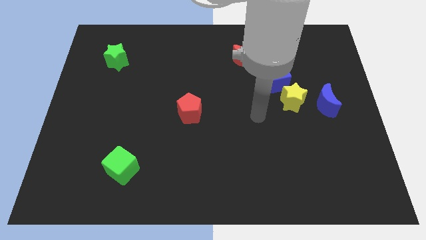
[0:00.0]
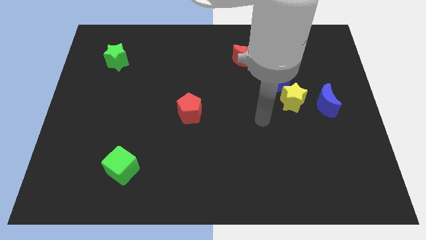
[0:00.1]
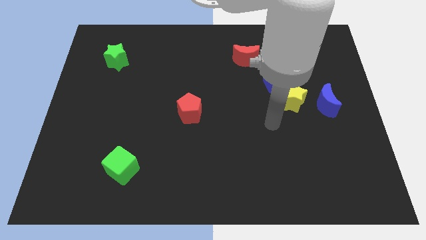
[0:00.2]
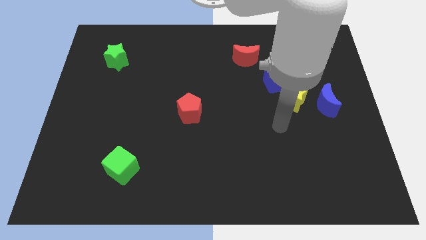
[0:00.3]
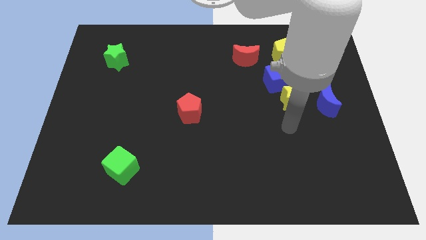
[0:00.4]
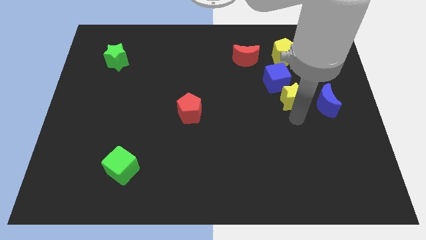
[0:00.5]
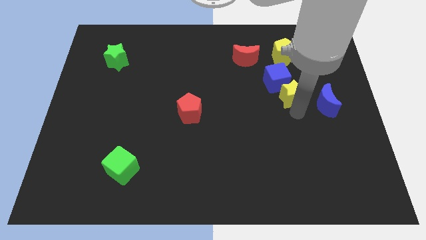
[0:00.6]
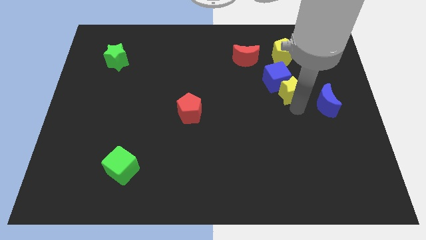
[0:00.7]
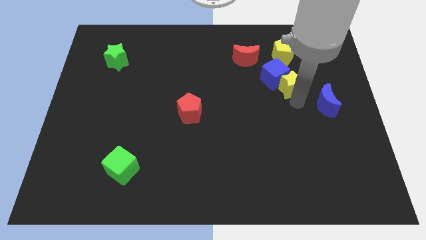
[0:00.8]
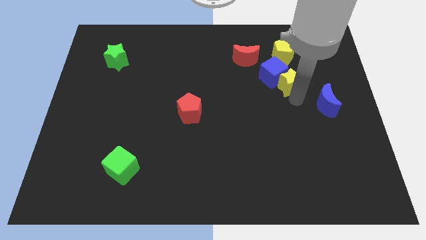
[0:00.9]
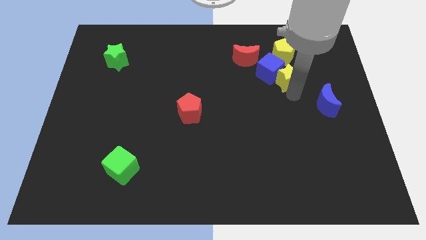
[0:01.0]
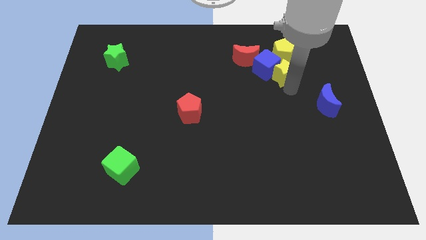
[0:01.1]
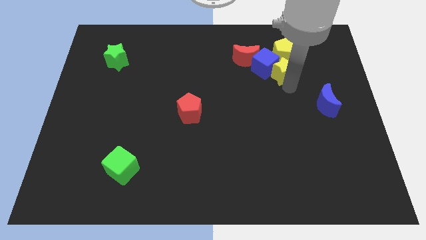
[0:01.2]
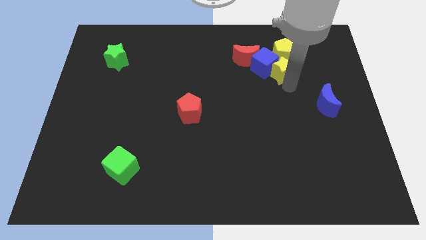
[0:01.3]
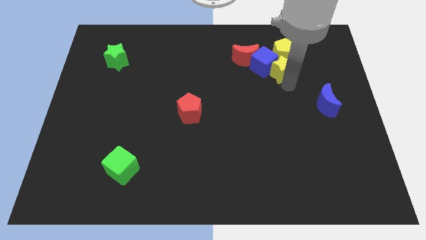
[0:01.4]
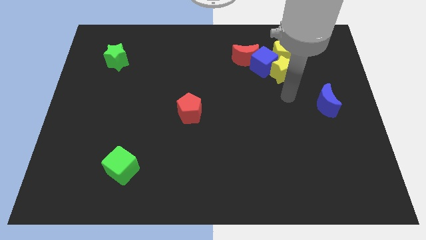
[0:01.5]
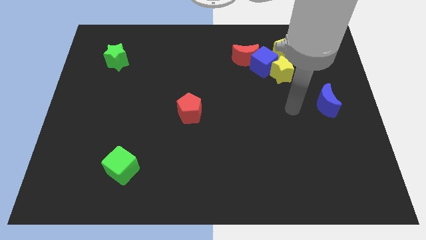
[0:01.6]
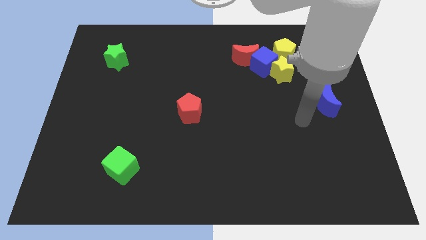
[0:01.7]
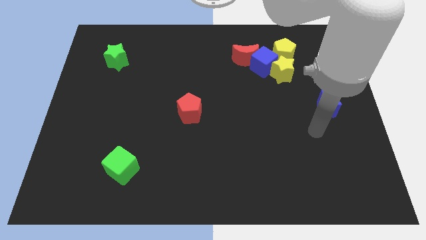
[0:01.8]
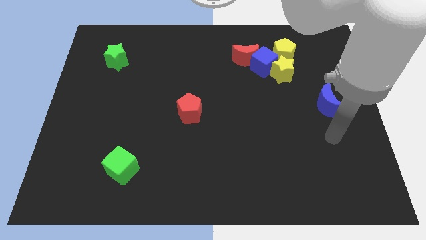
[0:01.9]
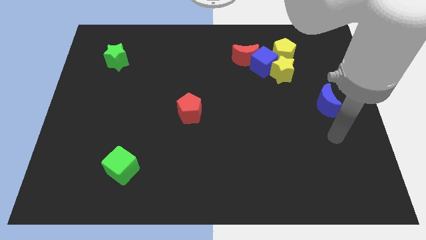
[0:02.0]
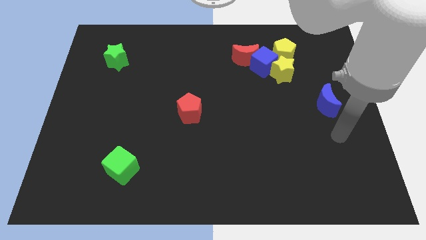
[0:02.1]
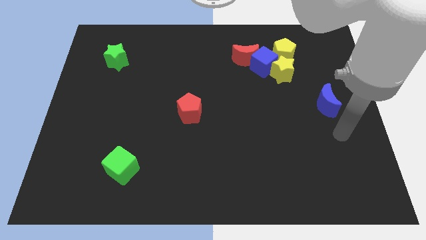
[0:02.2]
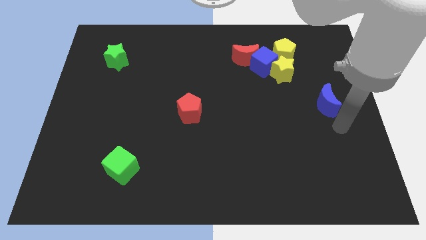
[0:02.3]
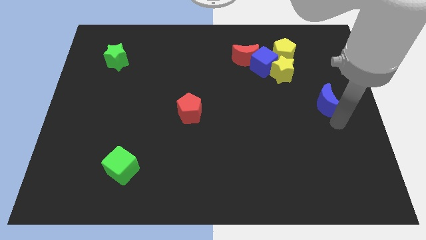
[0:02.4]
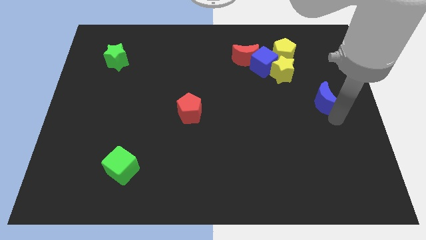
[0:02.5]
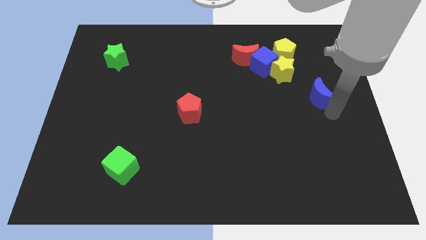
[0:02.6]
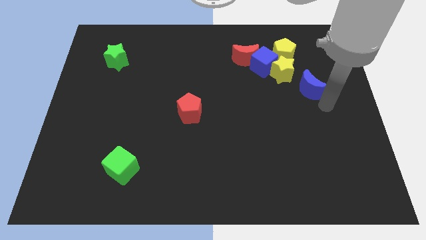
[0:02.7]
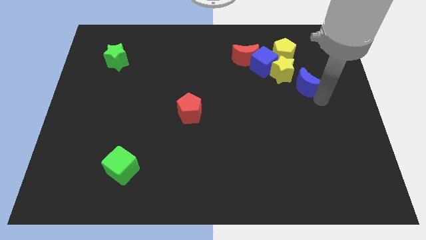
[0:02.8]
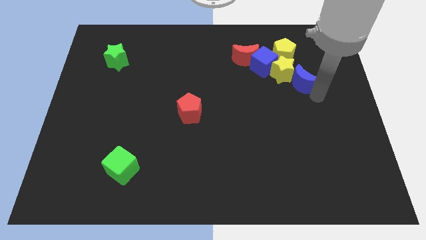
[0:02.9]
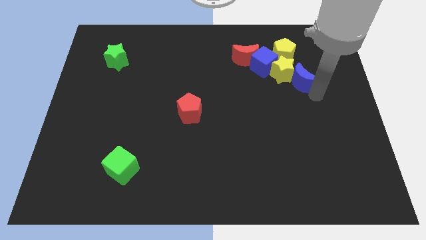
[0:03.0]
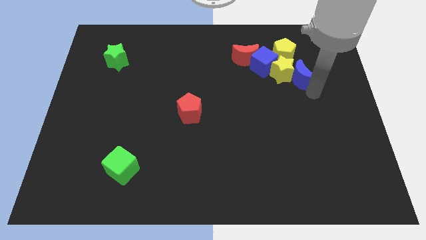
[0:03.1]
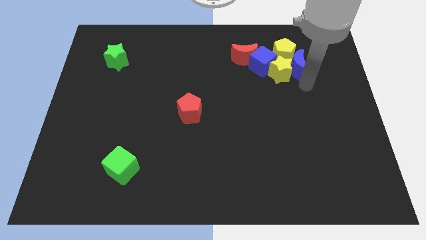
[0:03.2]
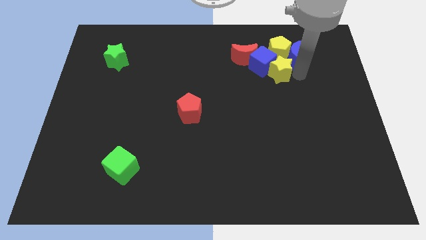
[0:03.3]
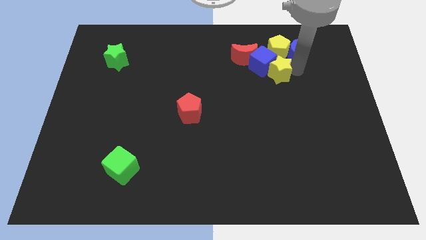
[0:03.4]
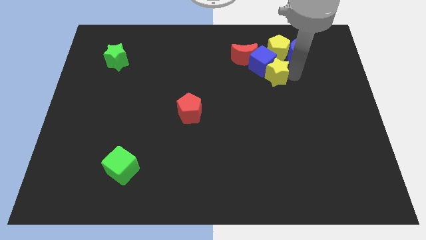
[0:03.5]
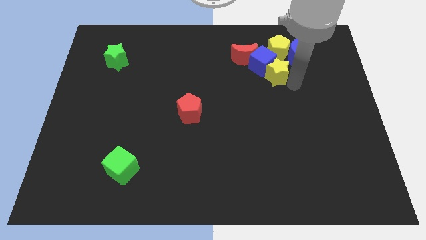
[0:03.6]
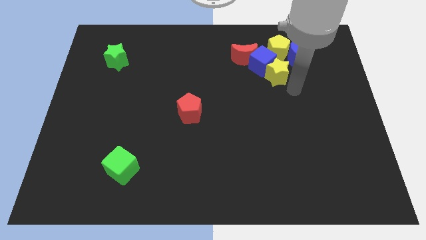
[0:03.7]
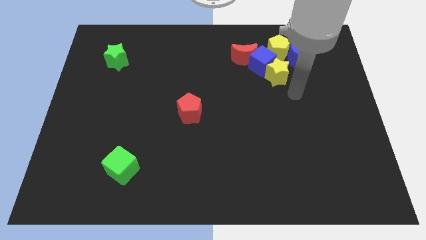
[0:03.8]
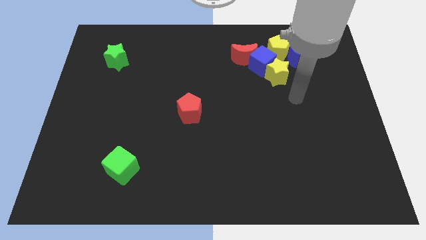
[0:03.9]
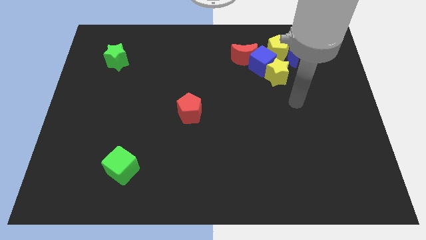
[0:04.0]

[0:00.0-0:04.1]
move the group of blocks to the top of the board

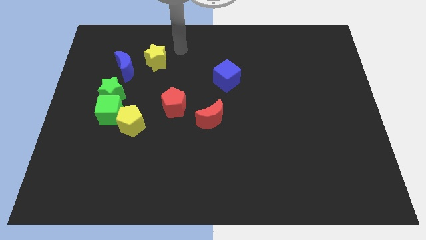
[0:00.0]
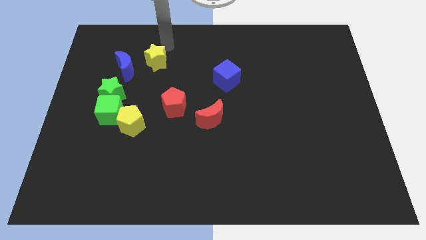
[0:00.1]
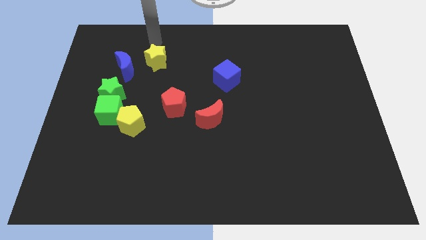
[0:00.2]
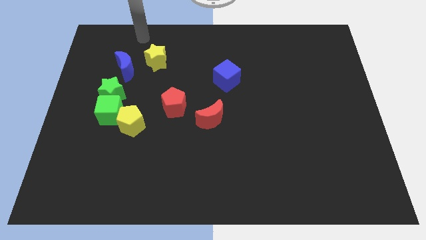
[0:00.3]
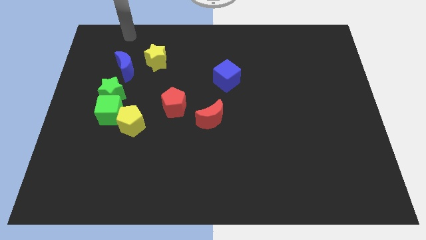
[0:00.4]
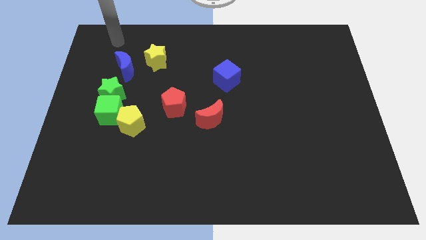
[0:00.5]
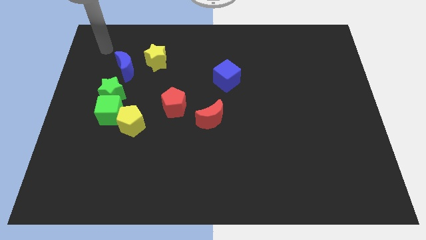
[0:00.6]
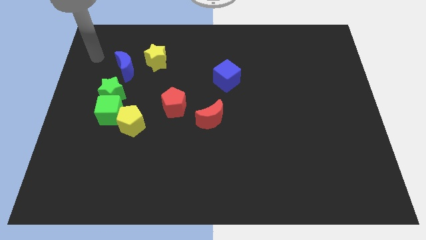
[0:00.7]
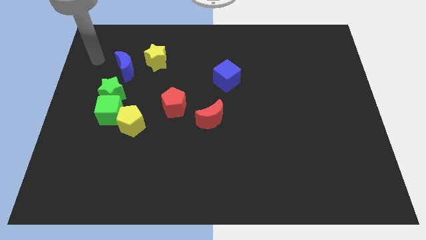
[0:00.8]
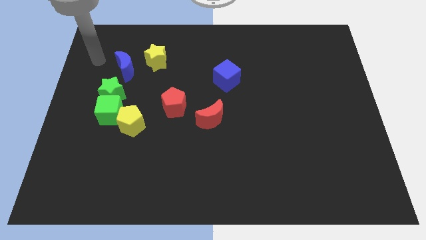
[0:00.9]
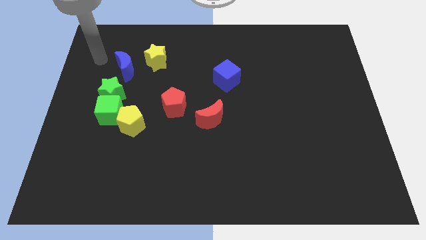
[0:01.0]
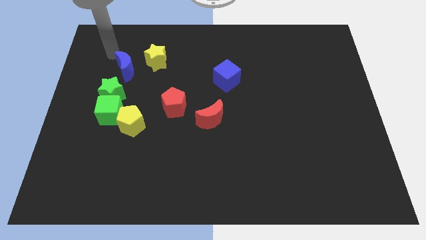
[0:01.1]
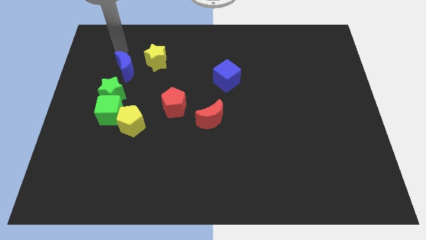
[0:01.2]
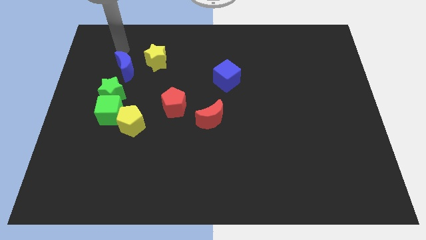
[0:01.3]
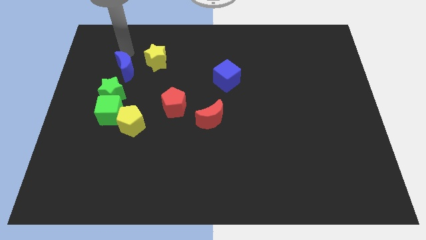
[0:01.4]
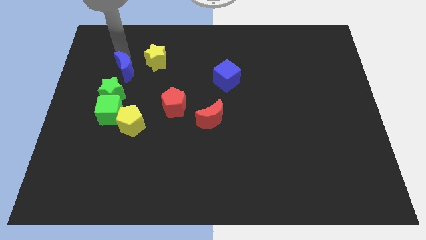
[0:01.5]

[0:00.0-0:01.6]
place the arm above the blue moon

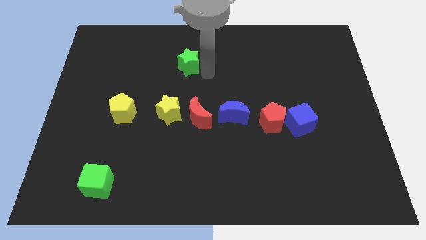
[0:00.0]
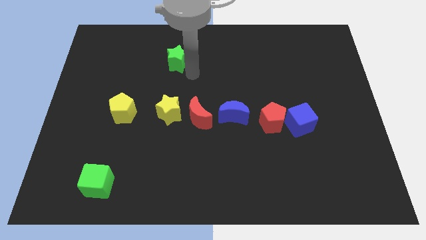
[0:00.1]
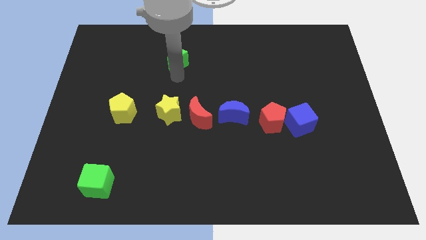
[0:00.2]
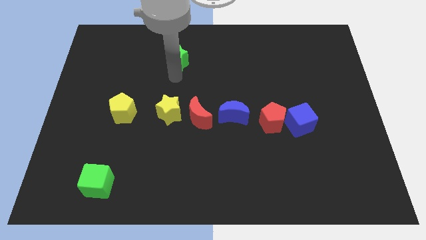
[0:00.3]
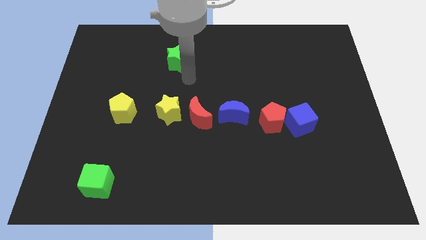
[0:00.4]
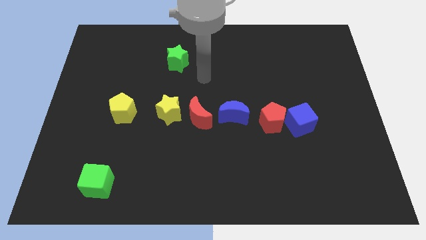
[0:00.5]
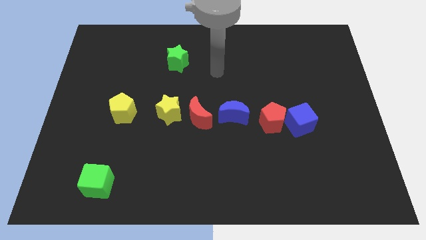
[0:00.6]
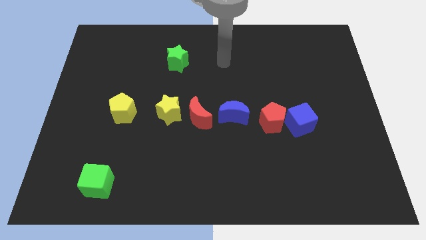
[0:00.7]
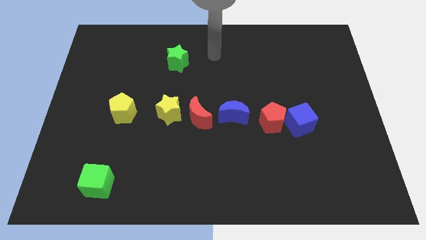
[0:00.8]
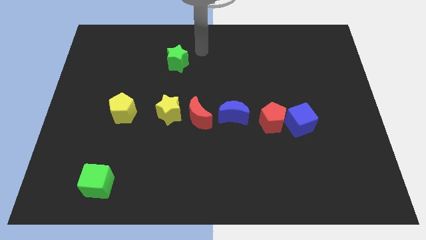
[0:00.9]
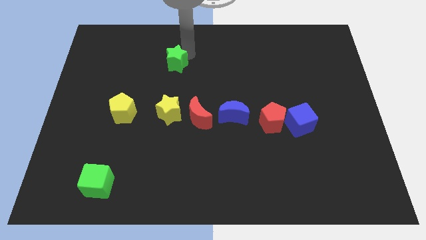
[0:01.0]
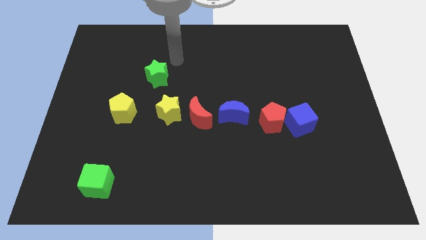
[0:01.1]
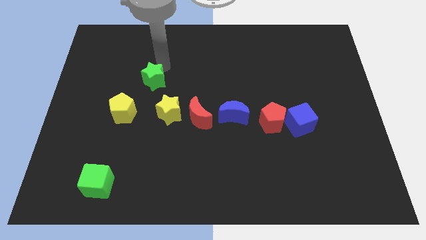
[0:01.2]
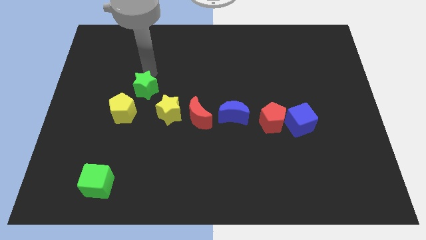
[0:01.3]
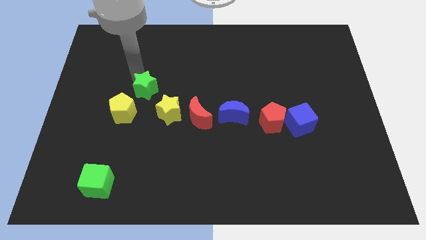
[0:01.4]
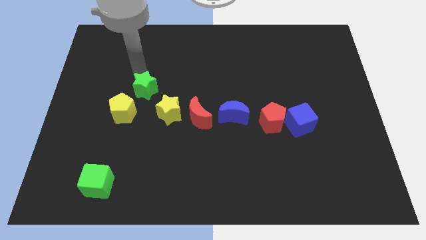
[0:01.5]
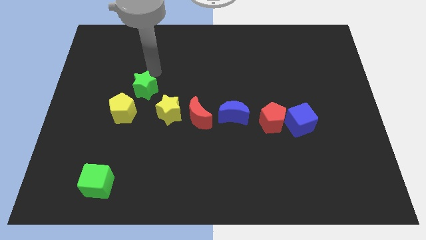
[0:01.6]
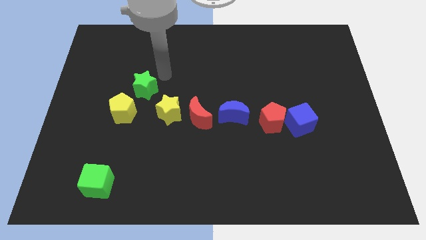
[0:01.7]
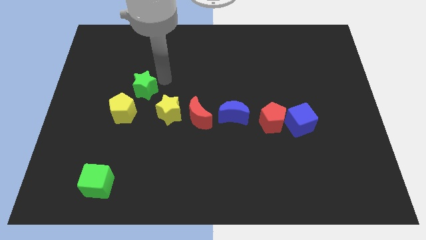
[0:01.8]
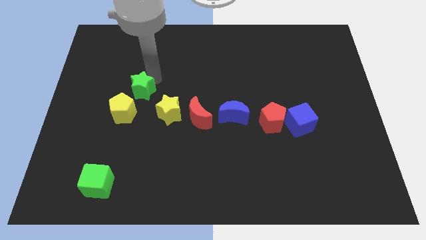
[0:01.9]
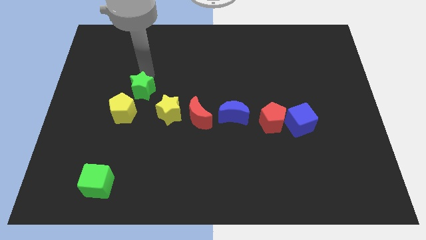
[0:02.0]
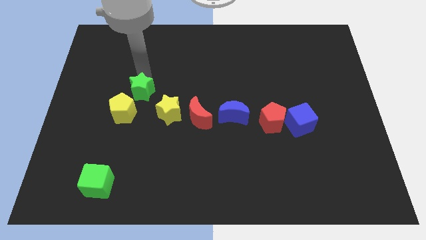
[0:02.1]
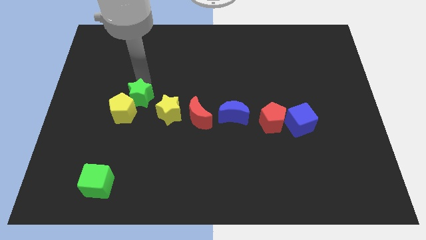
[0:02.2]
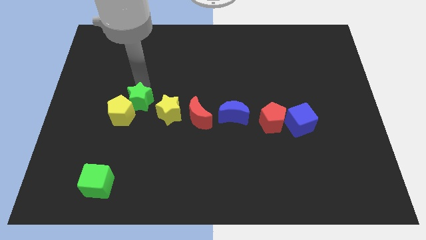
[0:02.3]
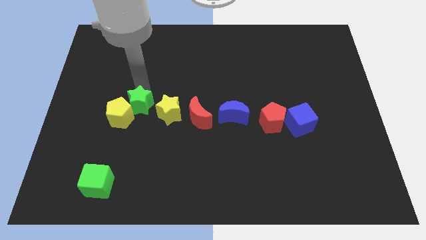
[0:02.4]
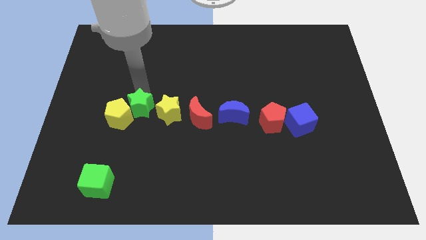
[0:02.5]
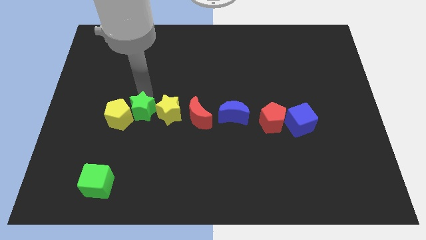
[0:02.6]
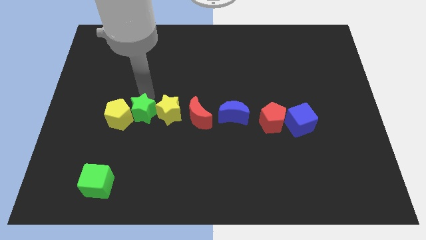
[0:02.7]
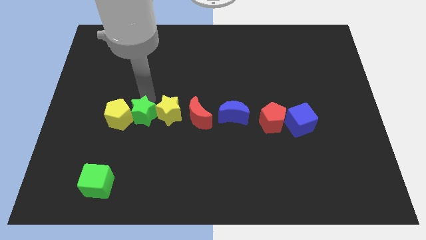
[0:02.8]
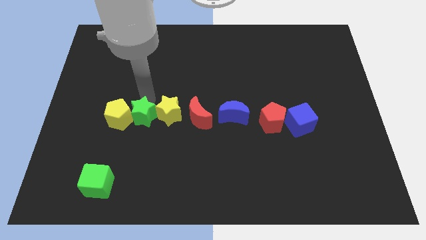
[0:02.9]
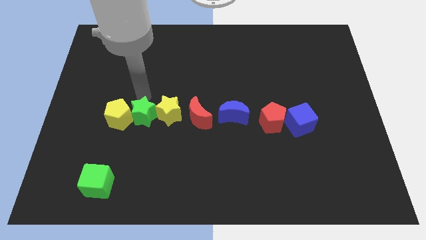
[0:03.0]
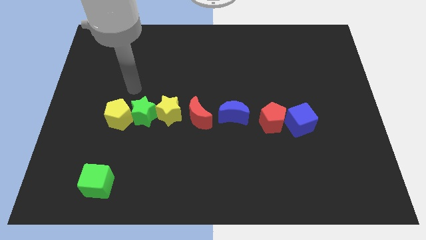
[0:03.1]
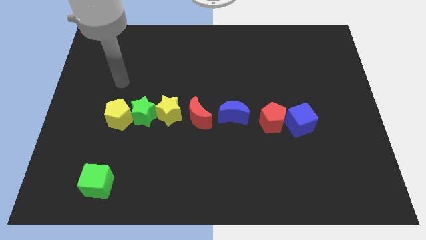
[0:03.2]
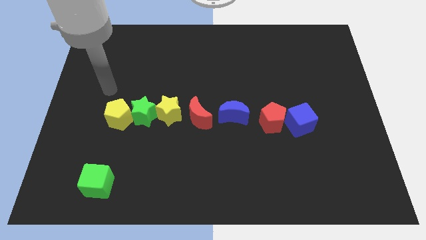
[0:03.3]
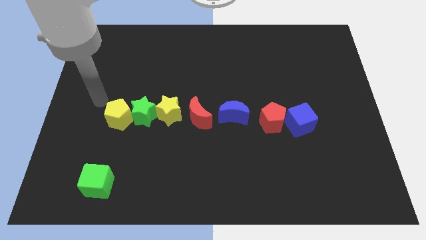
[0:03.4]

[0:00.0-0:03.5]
place the green star in between the yellow pentagon and the yellow star
